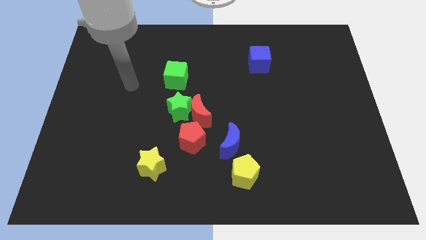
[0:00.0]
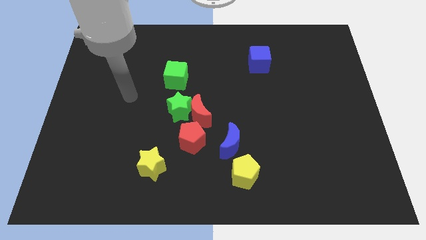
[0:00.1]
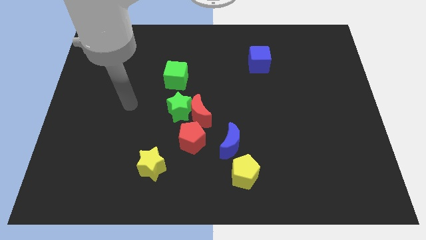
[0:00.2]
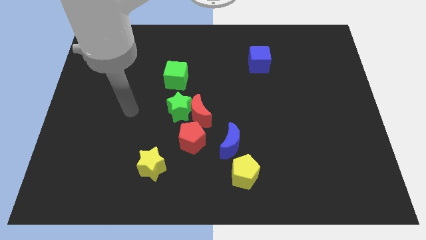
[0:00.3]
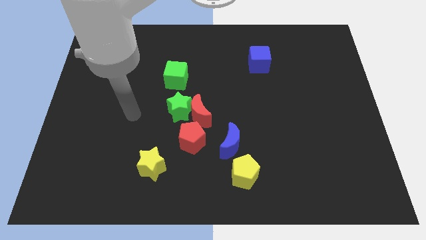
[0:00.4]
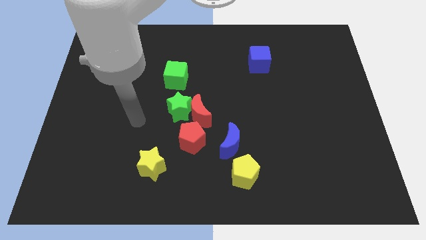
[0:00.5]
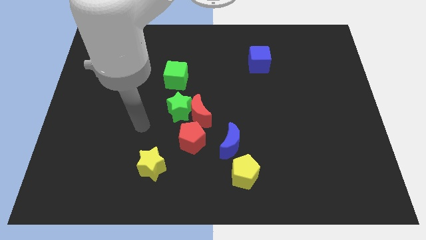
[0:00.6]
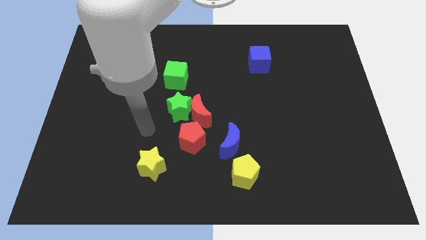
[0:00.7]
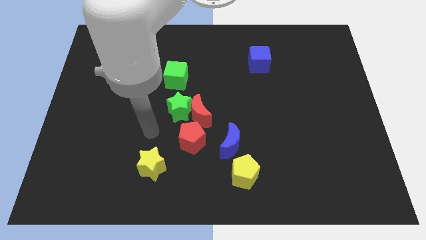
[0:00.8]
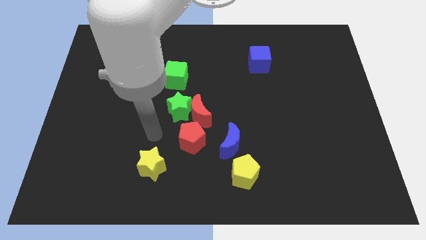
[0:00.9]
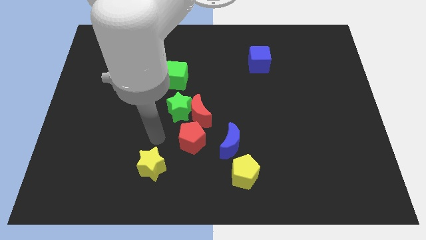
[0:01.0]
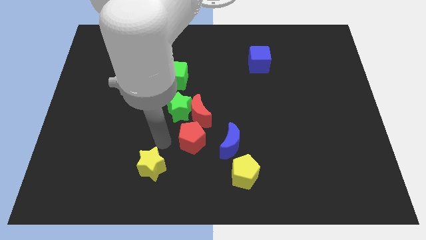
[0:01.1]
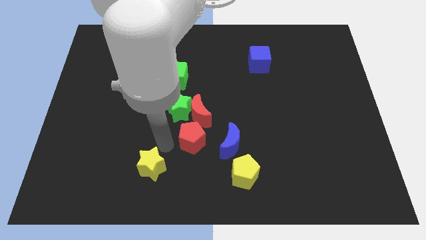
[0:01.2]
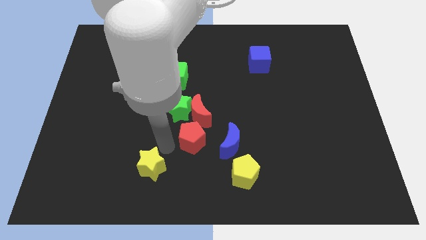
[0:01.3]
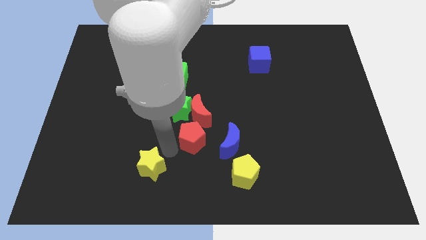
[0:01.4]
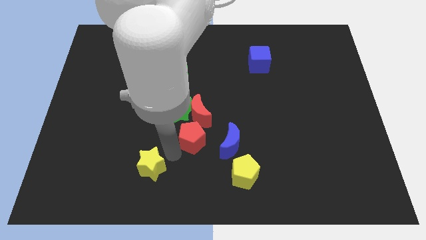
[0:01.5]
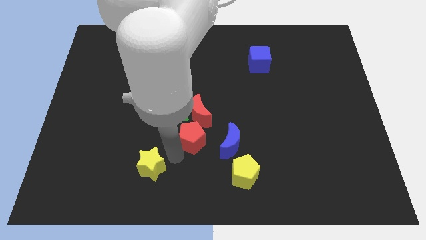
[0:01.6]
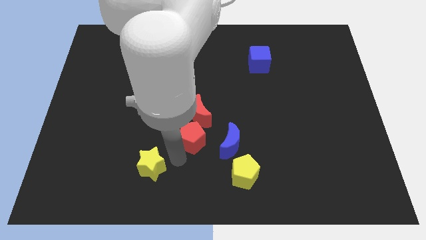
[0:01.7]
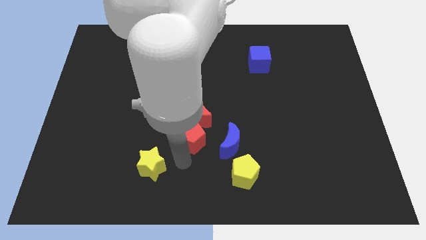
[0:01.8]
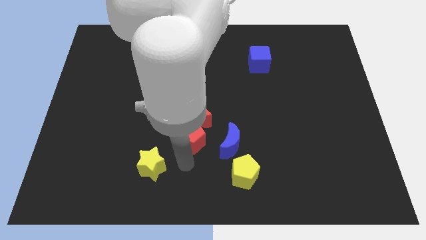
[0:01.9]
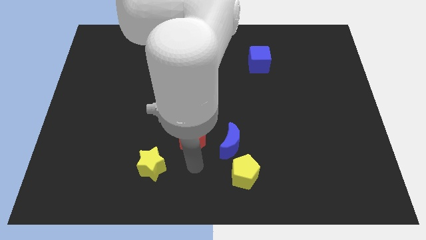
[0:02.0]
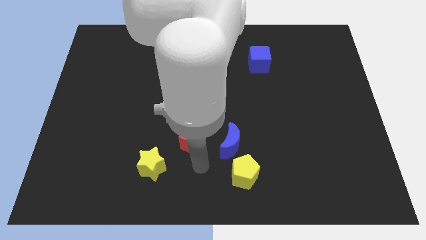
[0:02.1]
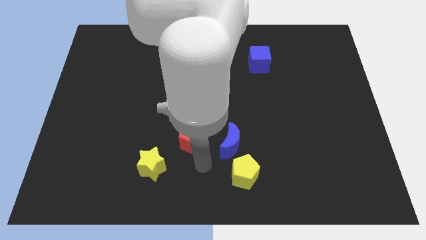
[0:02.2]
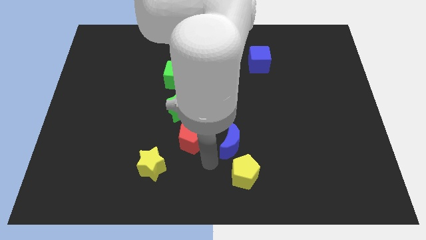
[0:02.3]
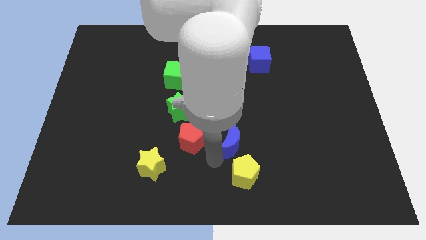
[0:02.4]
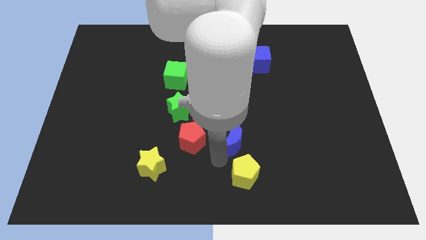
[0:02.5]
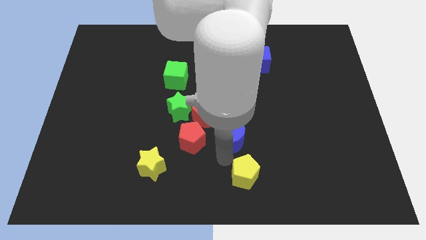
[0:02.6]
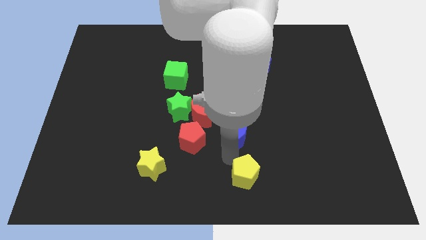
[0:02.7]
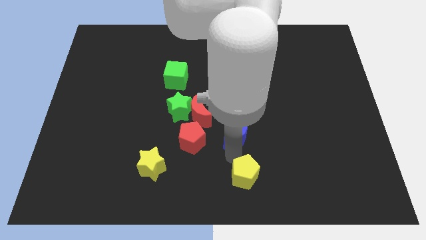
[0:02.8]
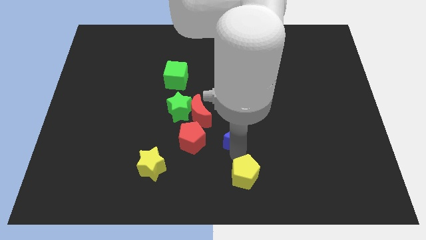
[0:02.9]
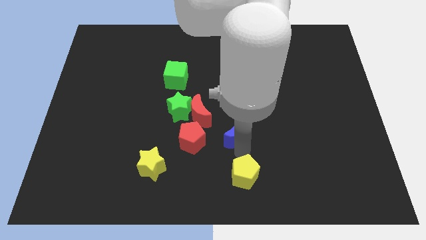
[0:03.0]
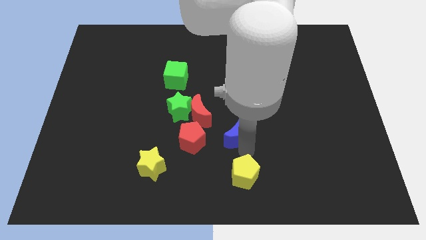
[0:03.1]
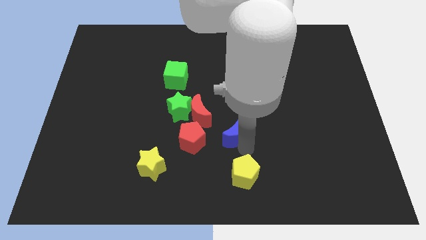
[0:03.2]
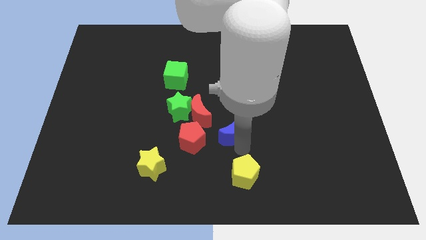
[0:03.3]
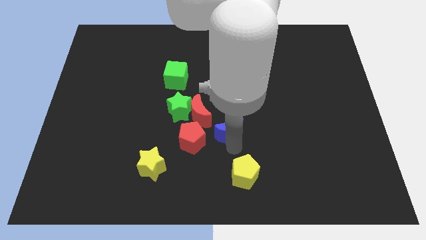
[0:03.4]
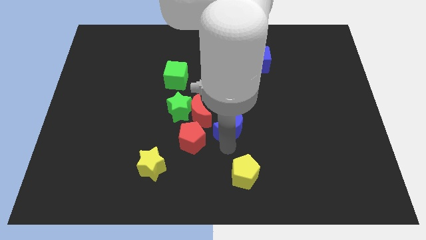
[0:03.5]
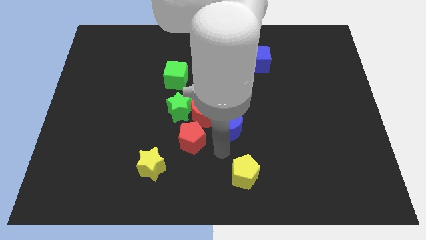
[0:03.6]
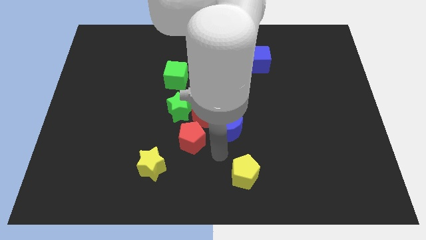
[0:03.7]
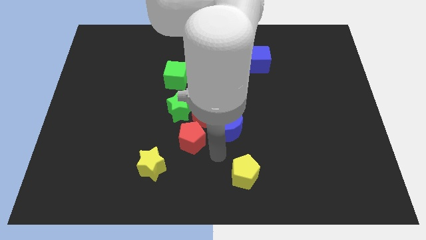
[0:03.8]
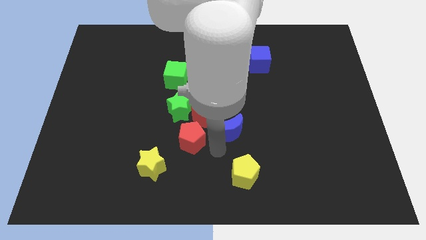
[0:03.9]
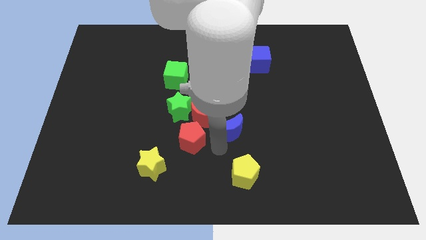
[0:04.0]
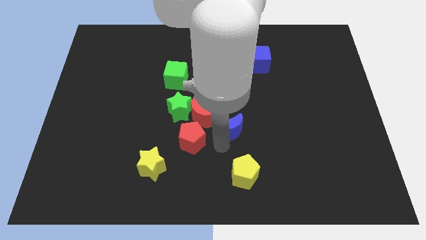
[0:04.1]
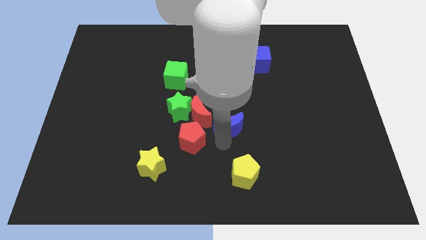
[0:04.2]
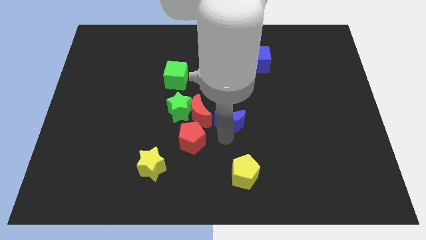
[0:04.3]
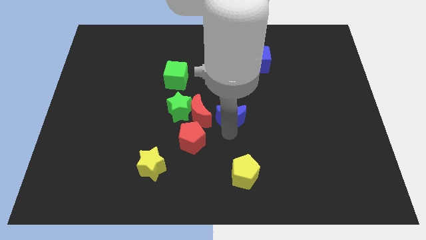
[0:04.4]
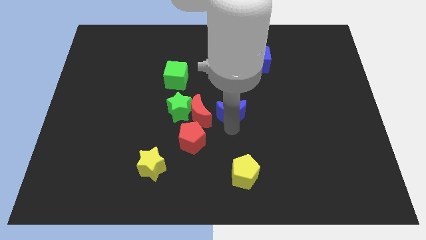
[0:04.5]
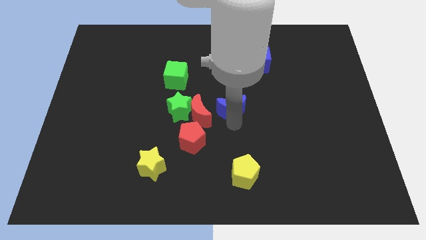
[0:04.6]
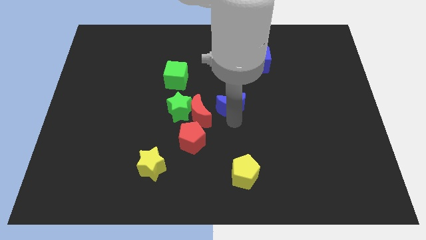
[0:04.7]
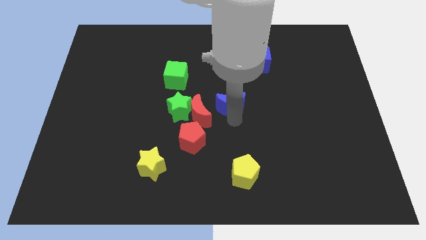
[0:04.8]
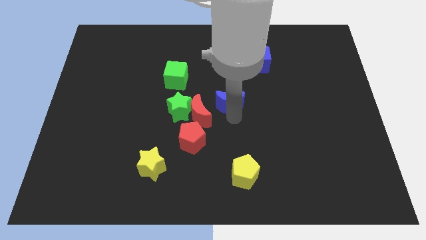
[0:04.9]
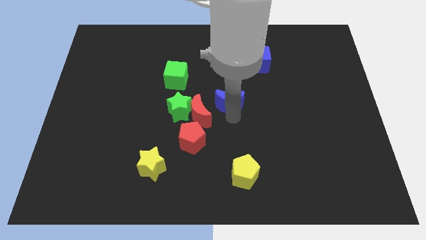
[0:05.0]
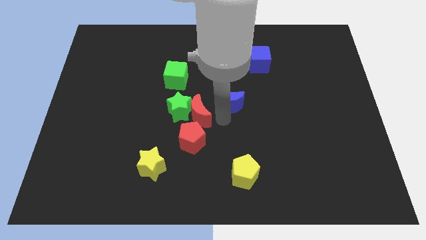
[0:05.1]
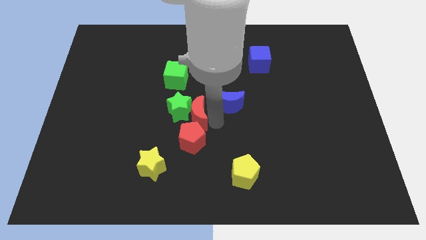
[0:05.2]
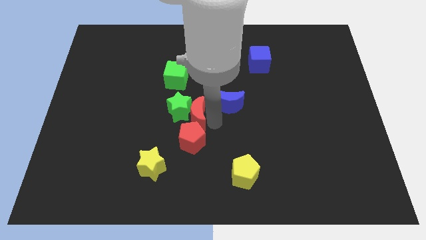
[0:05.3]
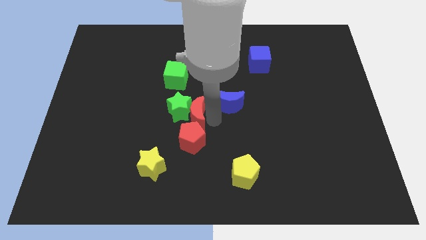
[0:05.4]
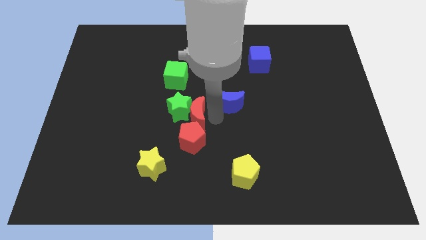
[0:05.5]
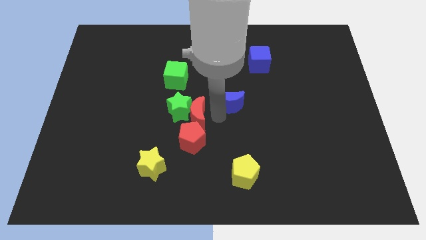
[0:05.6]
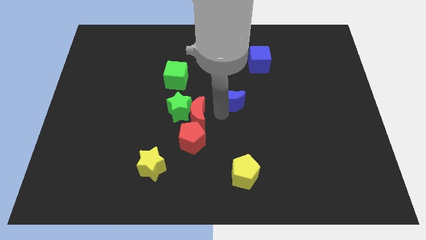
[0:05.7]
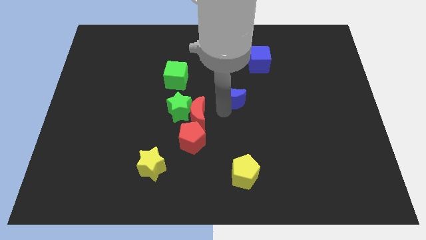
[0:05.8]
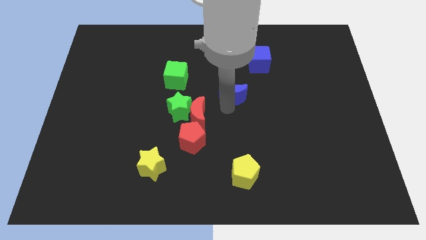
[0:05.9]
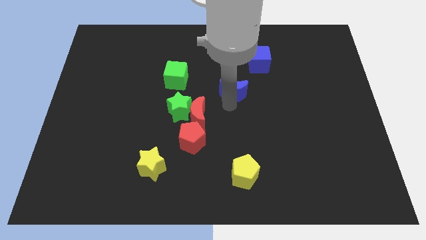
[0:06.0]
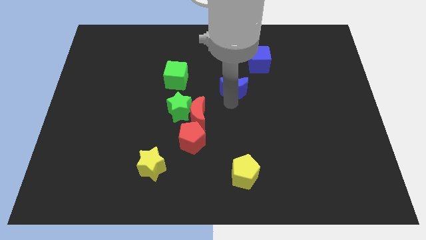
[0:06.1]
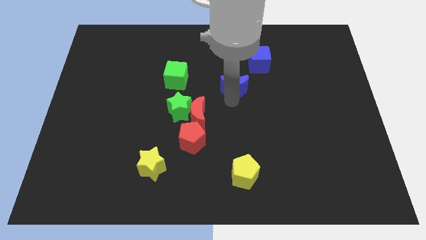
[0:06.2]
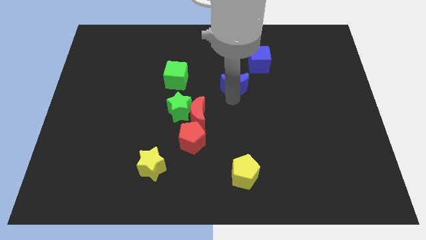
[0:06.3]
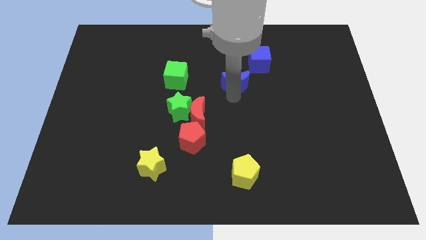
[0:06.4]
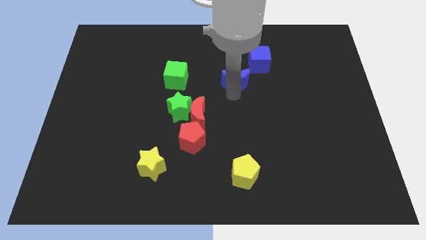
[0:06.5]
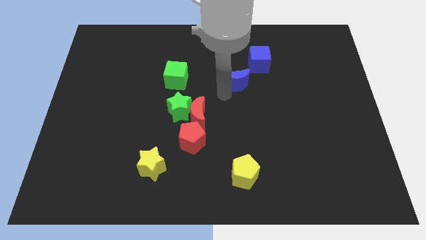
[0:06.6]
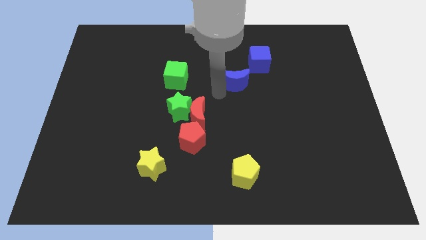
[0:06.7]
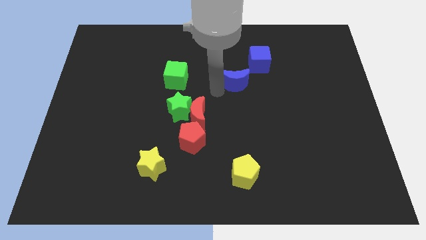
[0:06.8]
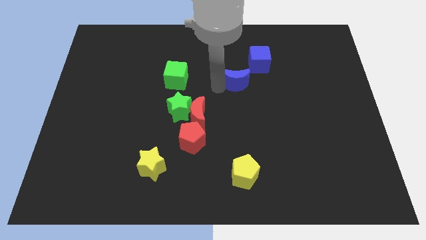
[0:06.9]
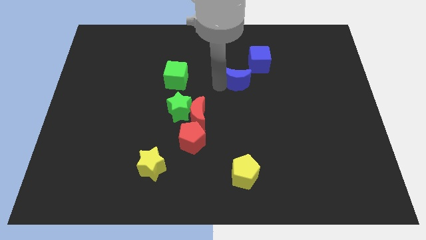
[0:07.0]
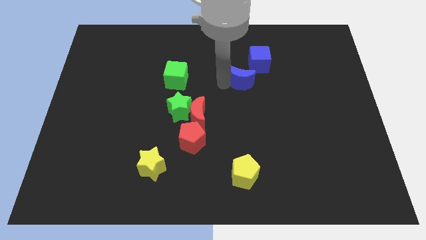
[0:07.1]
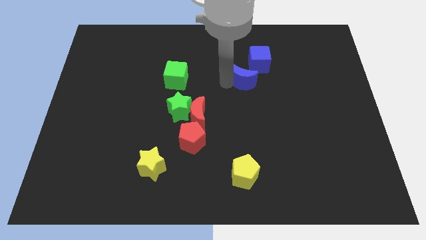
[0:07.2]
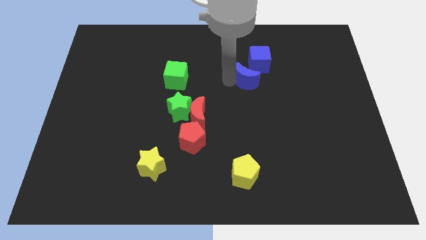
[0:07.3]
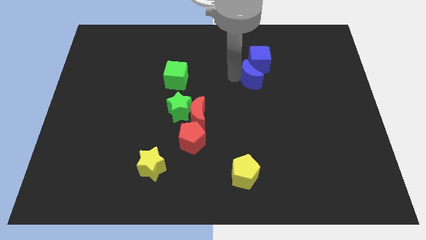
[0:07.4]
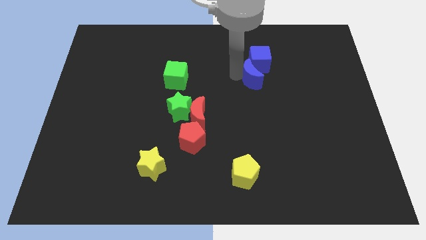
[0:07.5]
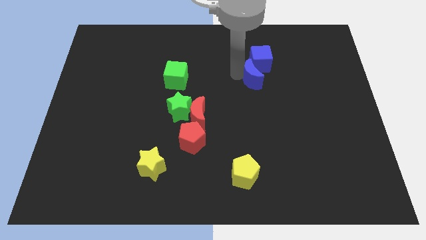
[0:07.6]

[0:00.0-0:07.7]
slide the blue moon to the blue cube

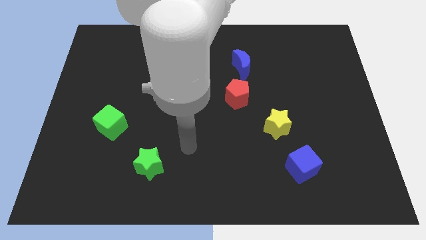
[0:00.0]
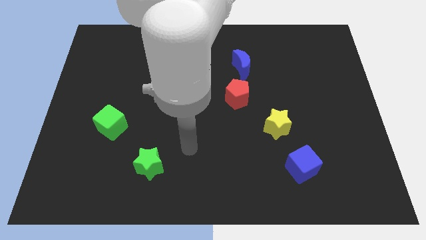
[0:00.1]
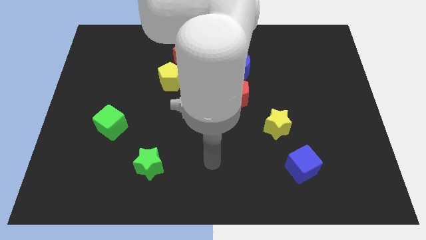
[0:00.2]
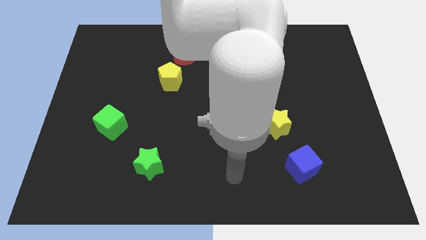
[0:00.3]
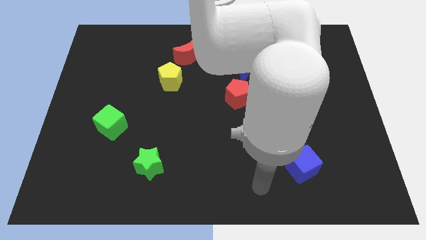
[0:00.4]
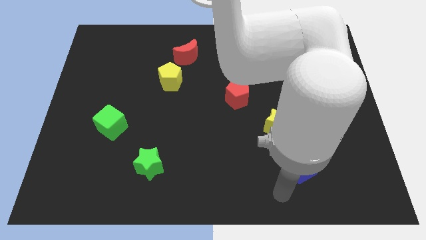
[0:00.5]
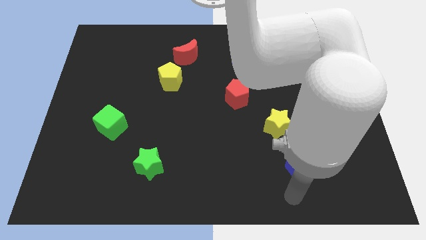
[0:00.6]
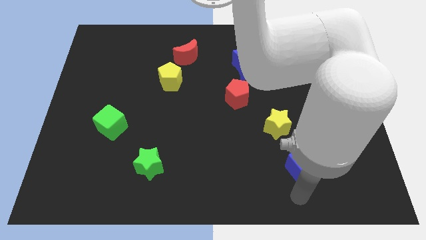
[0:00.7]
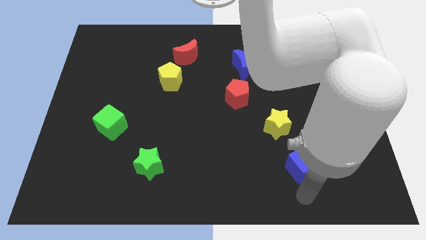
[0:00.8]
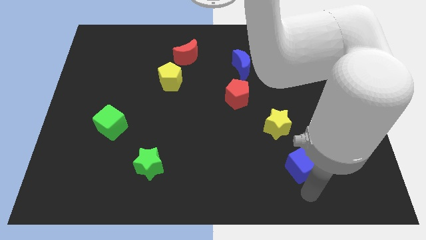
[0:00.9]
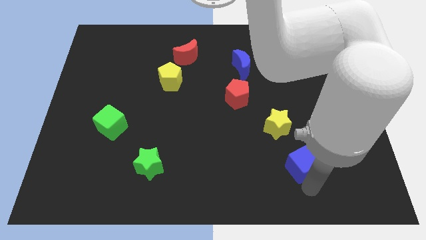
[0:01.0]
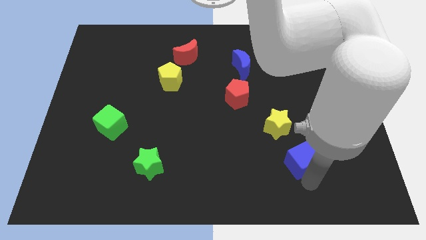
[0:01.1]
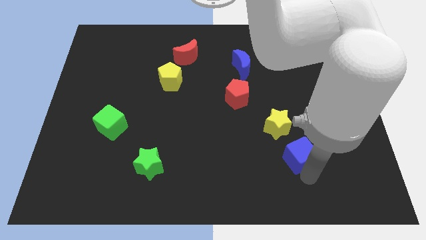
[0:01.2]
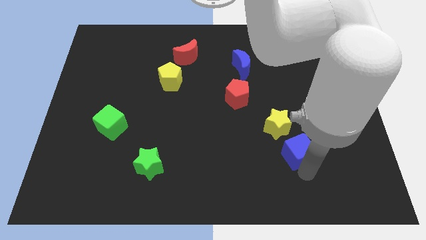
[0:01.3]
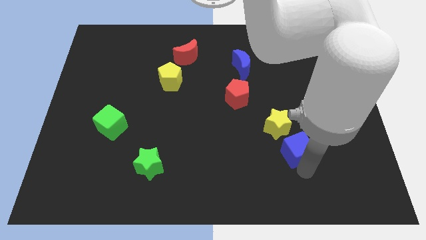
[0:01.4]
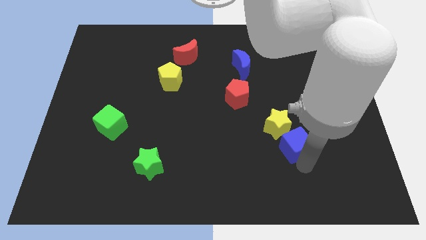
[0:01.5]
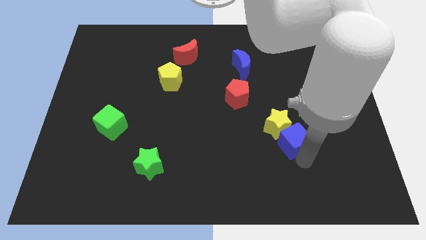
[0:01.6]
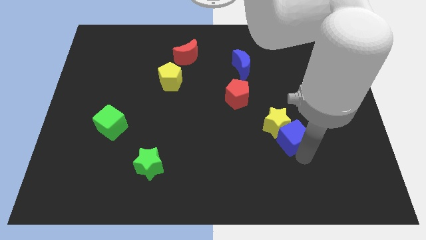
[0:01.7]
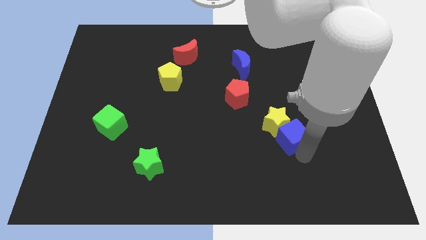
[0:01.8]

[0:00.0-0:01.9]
move the blue cube towards the yellow star
